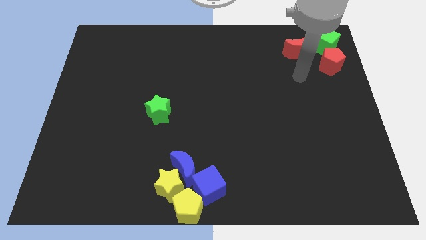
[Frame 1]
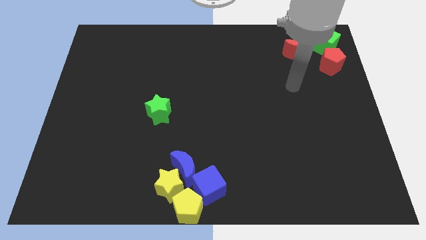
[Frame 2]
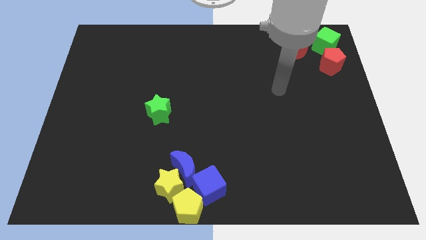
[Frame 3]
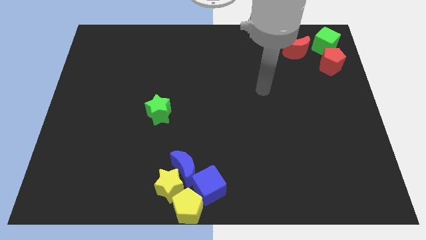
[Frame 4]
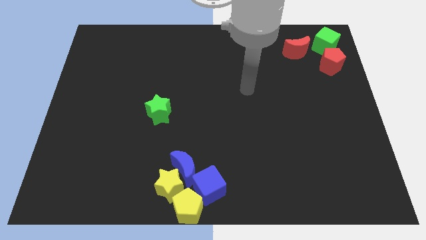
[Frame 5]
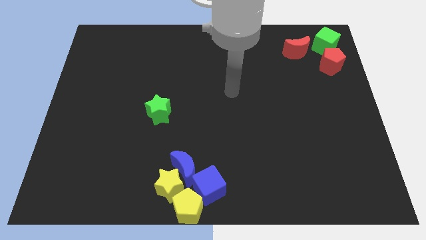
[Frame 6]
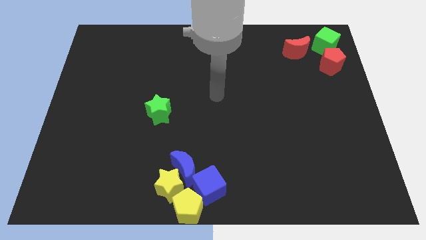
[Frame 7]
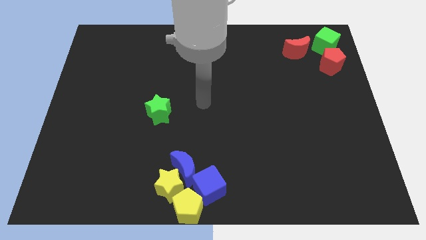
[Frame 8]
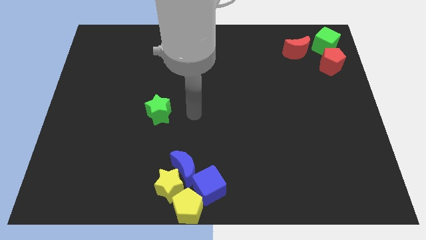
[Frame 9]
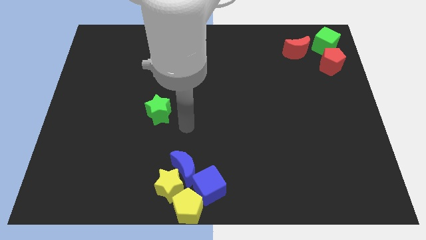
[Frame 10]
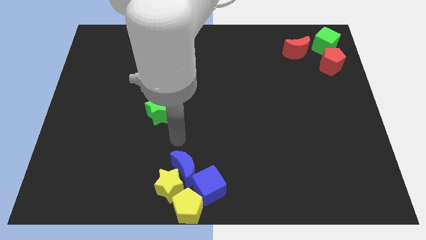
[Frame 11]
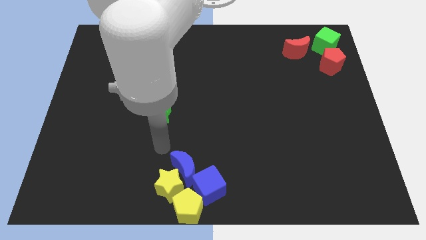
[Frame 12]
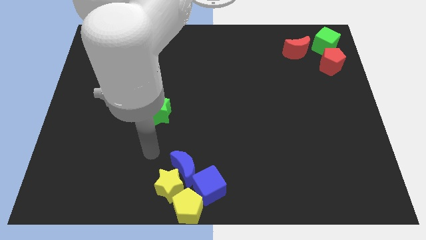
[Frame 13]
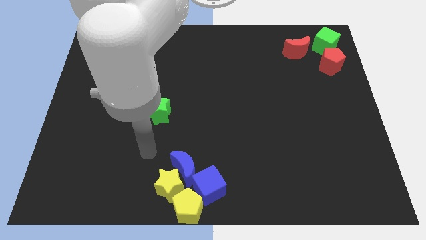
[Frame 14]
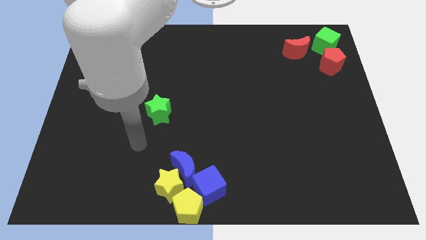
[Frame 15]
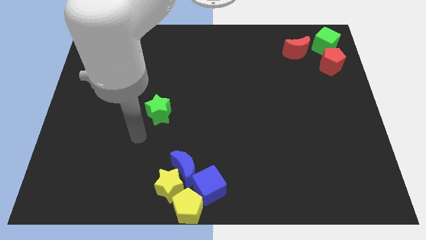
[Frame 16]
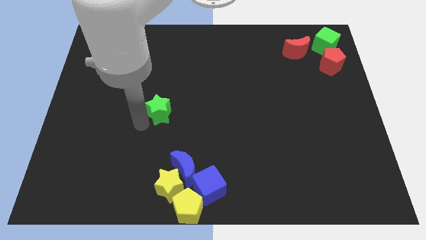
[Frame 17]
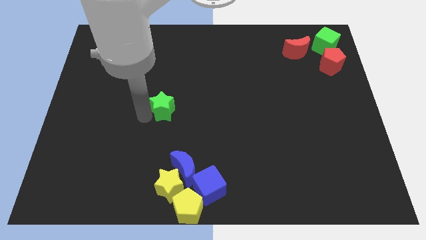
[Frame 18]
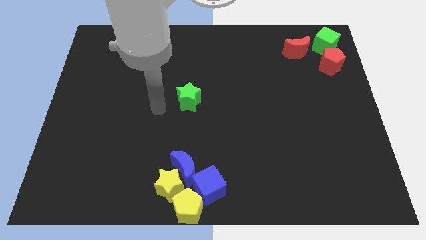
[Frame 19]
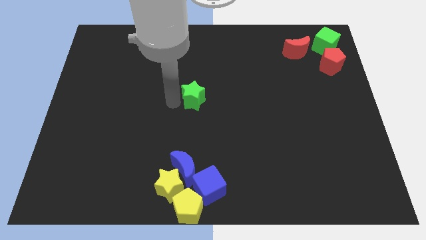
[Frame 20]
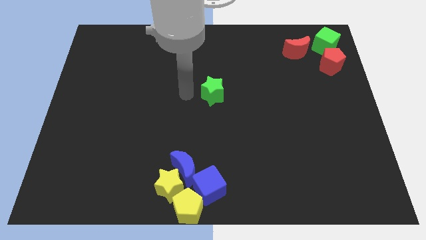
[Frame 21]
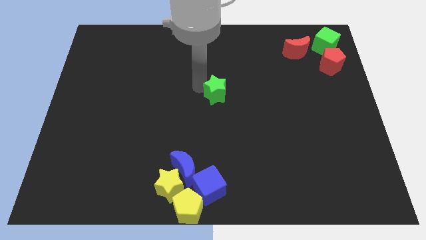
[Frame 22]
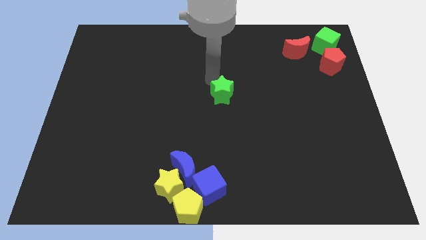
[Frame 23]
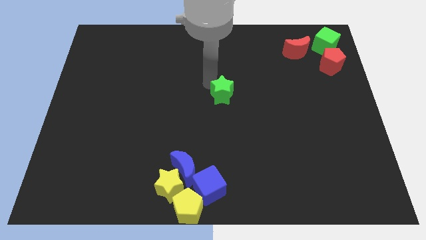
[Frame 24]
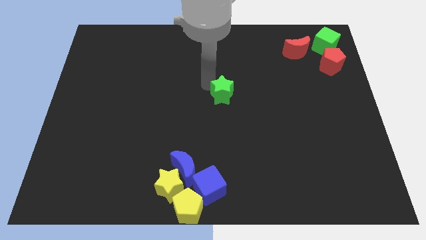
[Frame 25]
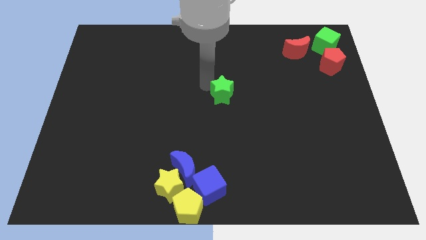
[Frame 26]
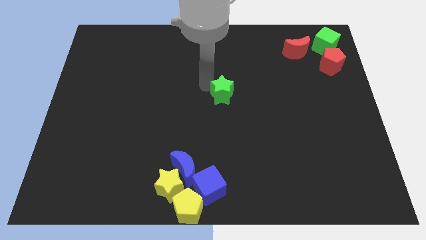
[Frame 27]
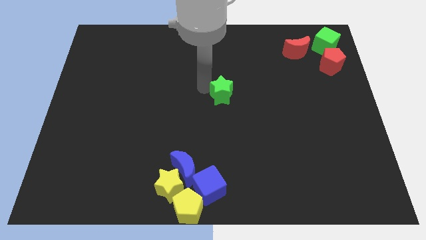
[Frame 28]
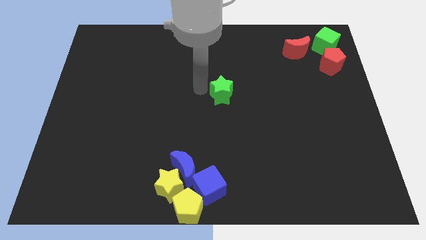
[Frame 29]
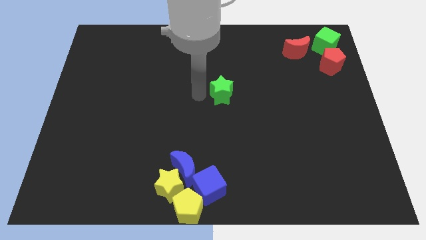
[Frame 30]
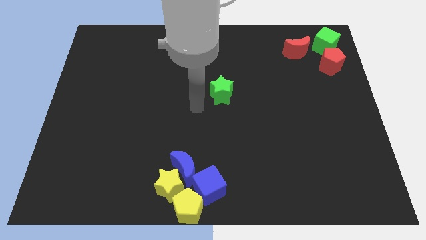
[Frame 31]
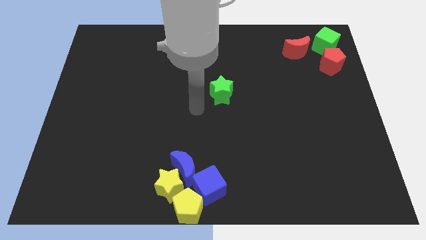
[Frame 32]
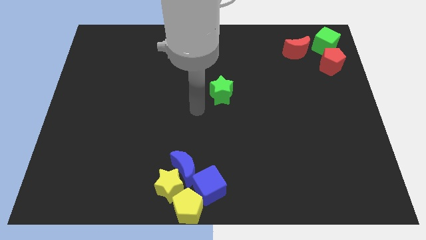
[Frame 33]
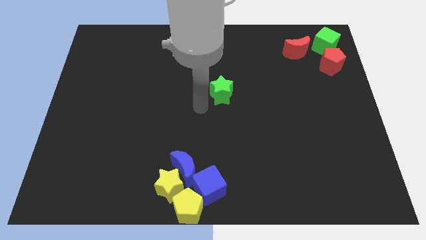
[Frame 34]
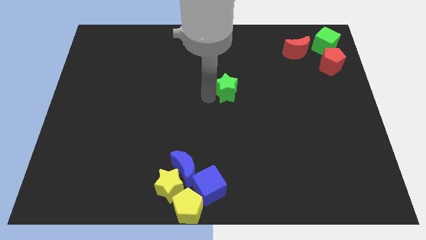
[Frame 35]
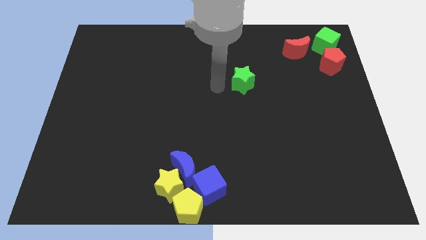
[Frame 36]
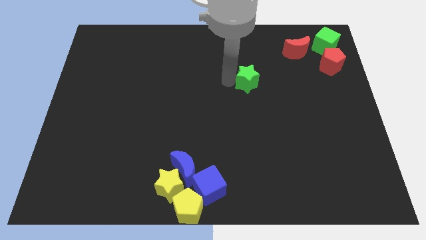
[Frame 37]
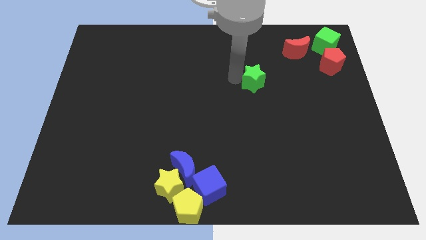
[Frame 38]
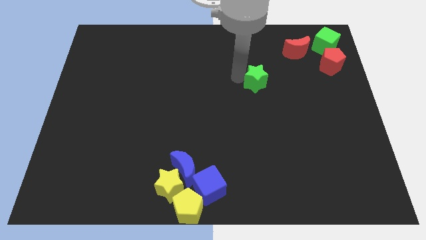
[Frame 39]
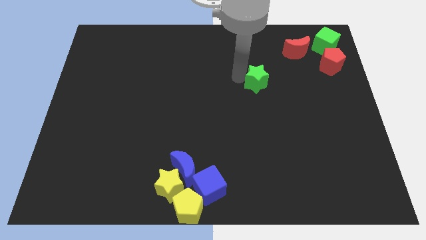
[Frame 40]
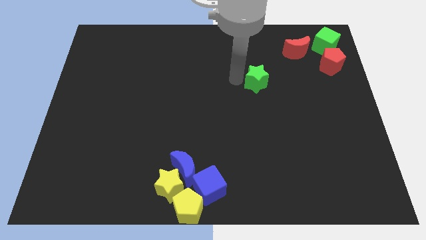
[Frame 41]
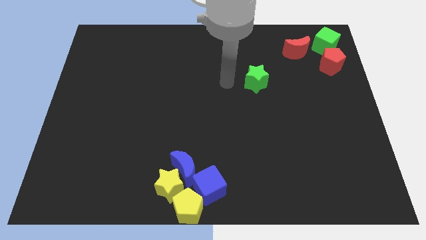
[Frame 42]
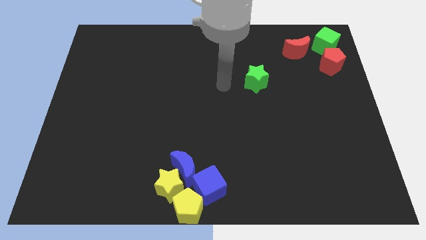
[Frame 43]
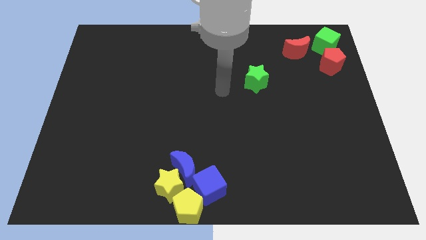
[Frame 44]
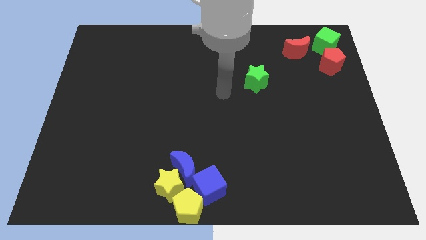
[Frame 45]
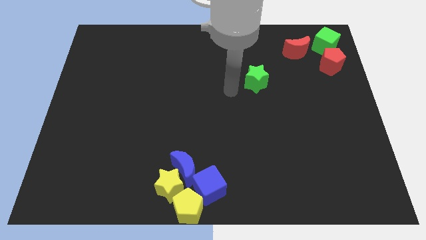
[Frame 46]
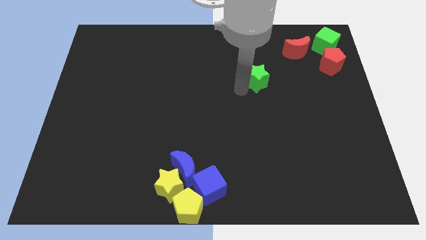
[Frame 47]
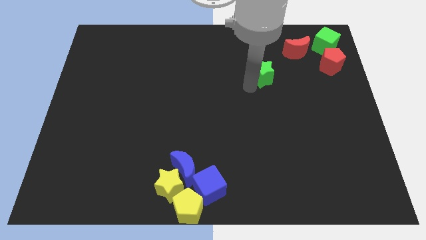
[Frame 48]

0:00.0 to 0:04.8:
move the green star to the bottom left of the red crescent

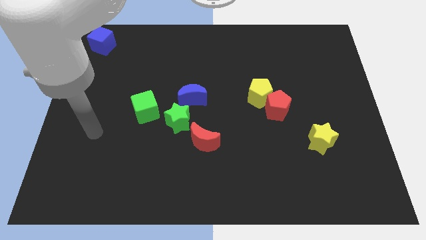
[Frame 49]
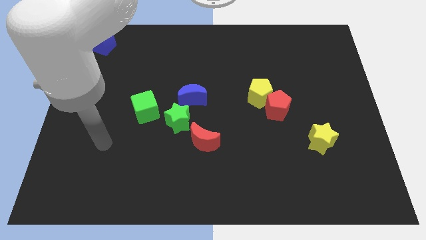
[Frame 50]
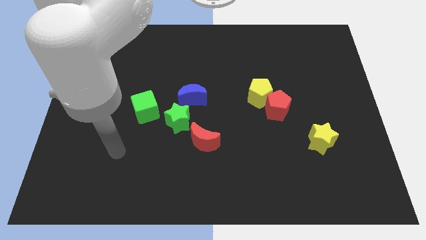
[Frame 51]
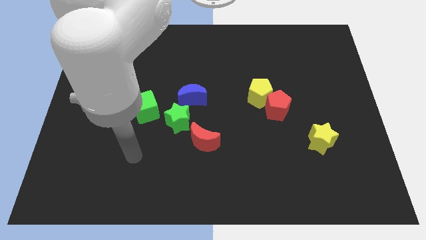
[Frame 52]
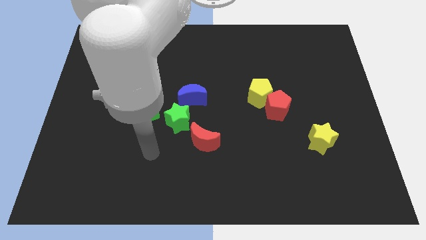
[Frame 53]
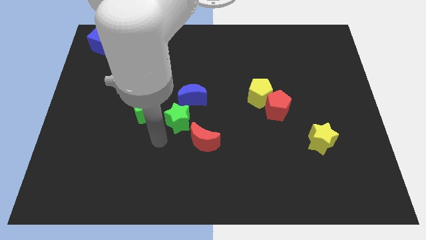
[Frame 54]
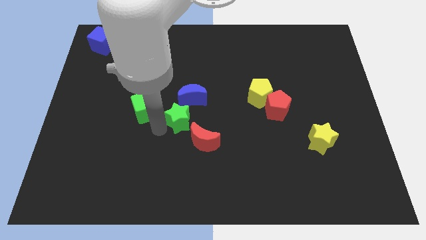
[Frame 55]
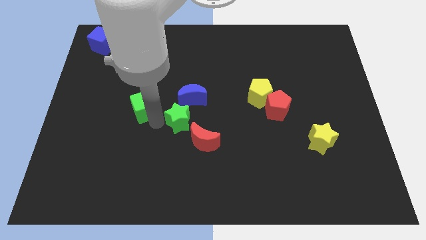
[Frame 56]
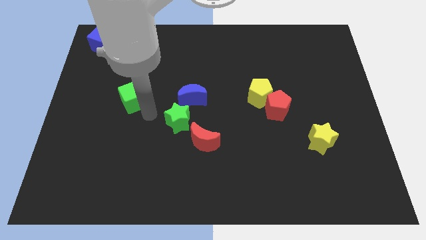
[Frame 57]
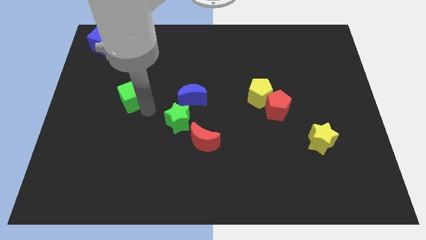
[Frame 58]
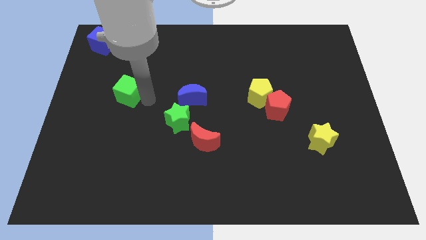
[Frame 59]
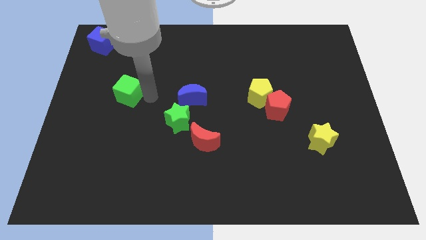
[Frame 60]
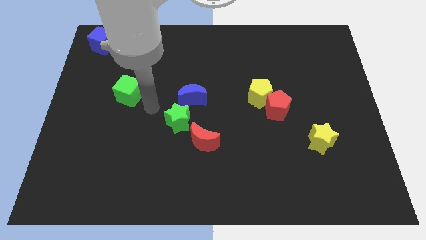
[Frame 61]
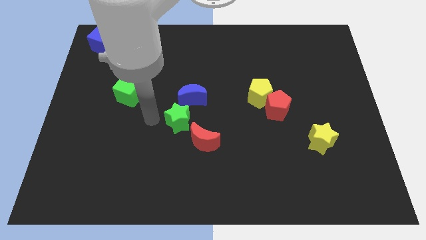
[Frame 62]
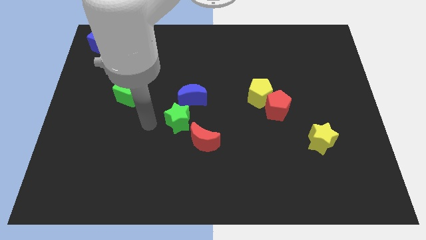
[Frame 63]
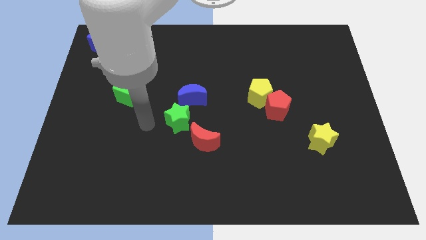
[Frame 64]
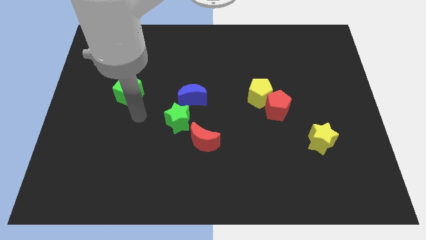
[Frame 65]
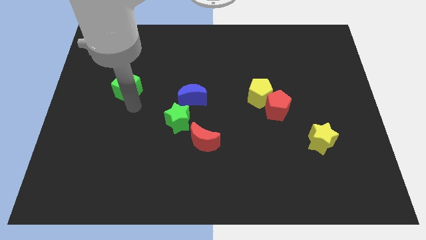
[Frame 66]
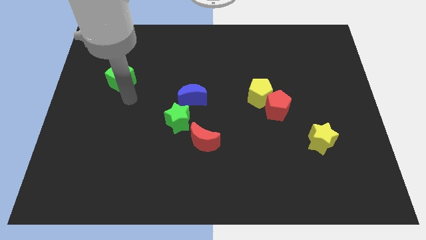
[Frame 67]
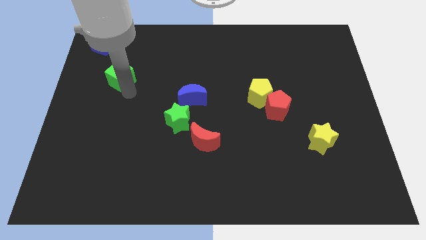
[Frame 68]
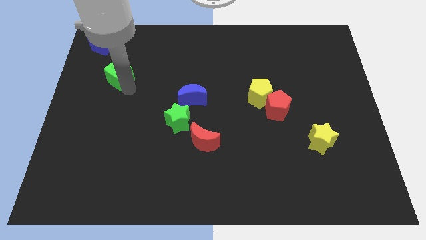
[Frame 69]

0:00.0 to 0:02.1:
move the green cube towards the top left corner of the board

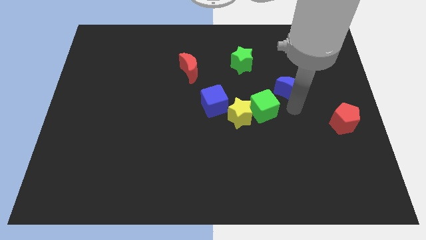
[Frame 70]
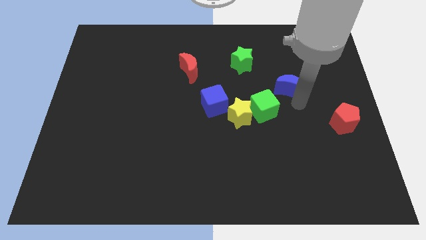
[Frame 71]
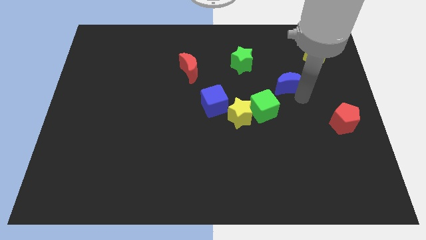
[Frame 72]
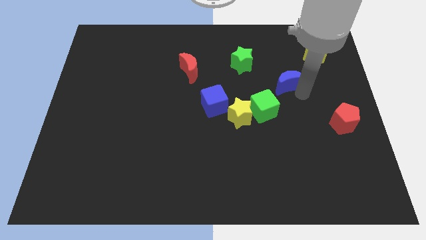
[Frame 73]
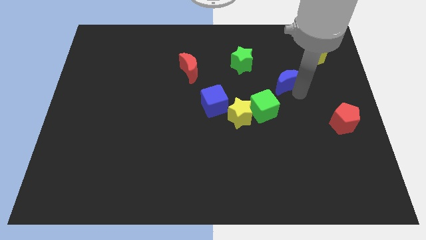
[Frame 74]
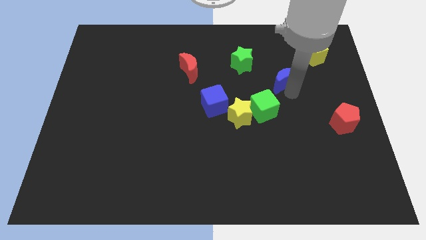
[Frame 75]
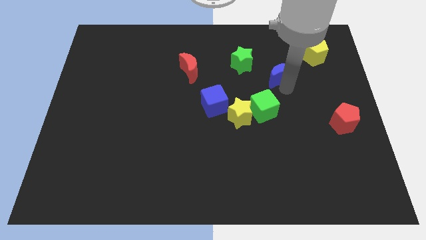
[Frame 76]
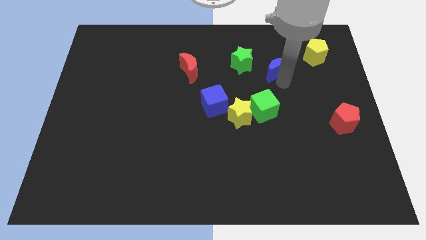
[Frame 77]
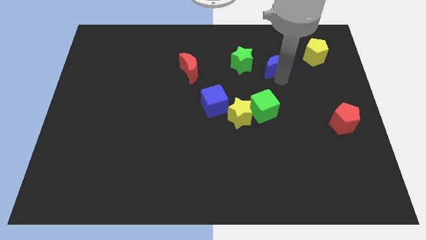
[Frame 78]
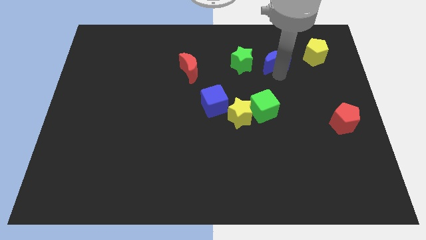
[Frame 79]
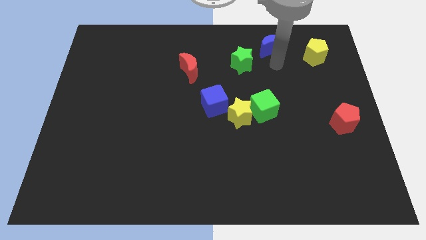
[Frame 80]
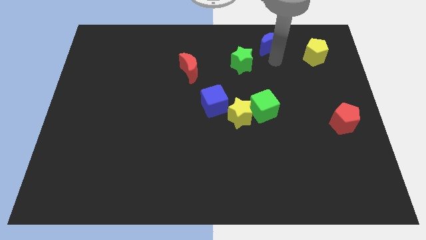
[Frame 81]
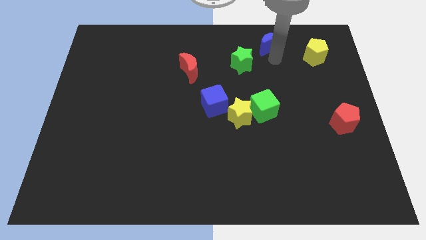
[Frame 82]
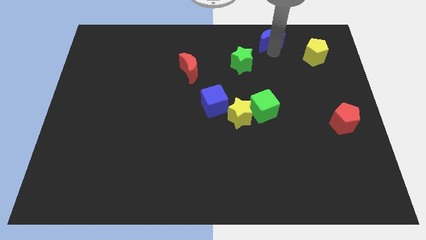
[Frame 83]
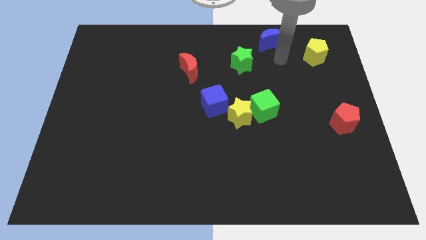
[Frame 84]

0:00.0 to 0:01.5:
move the blue crescent to the top right of the green star

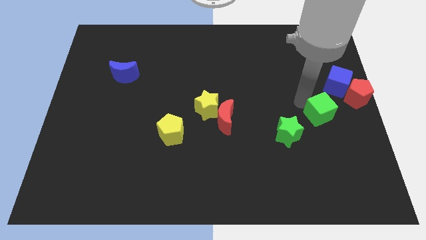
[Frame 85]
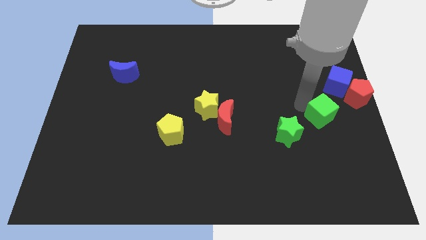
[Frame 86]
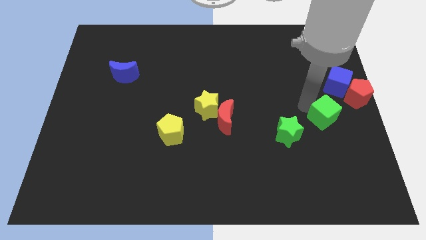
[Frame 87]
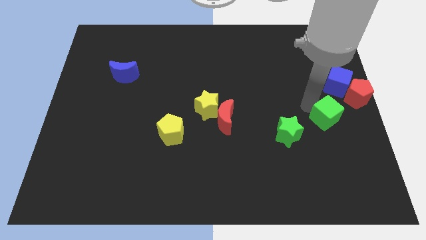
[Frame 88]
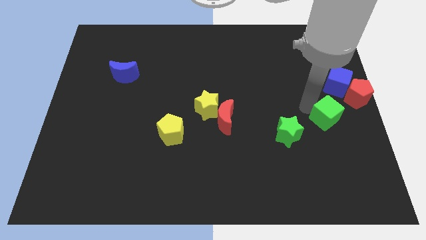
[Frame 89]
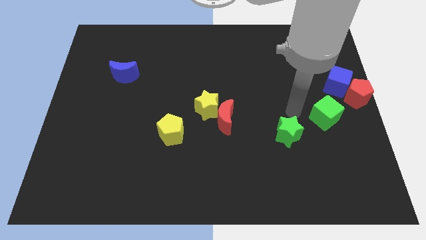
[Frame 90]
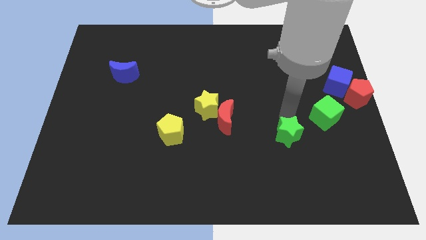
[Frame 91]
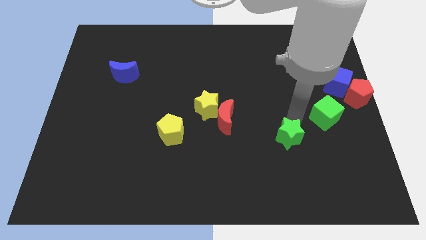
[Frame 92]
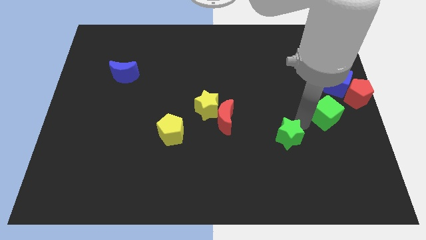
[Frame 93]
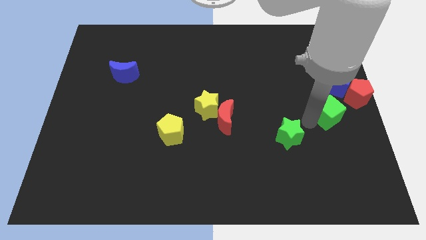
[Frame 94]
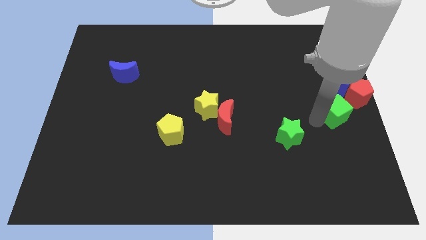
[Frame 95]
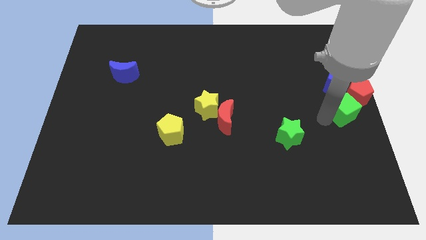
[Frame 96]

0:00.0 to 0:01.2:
move green cube into red pentagon
